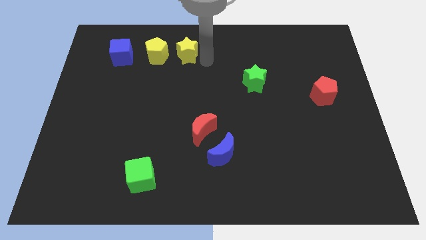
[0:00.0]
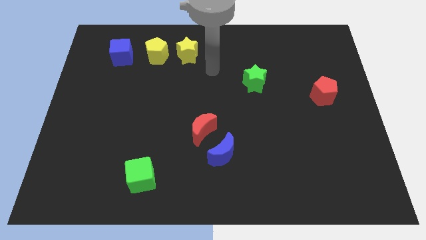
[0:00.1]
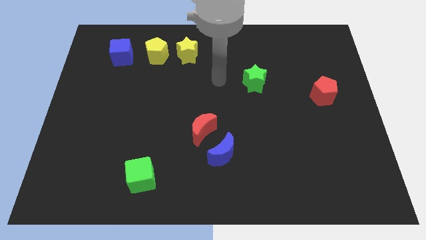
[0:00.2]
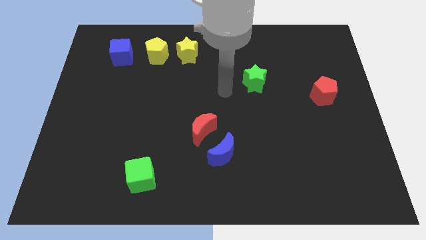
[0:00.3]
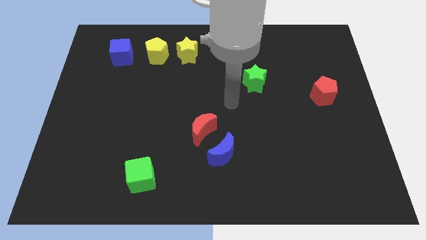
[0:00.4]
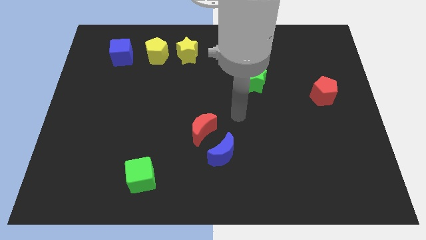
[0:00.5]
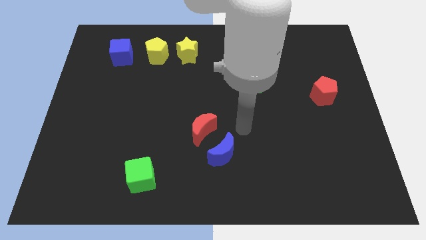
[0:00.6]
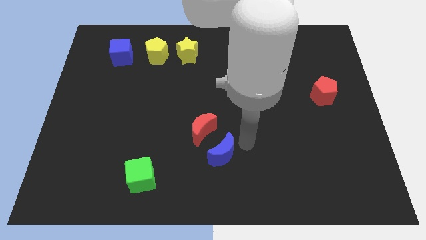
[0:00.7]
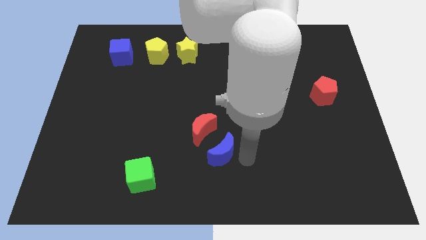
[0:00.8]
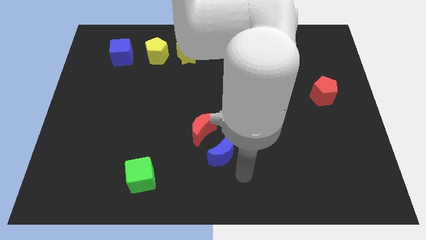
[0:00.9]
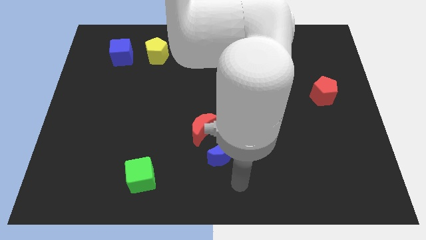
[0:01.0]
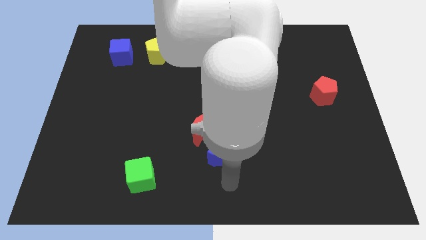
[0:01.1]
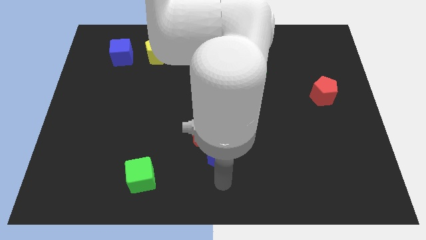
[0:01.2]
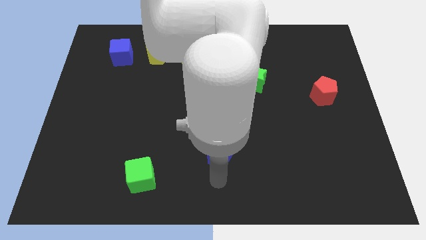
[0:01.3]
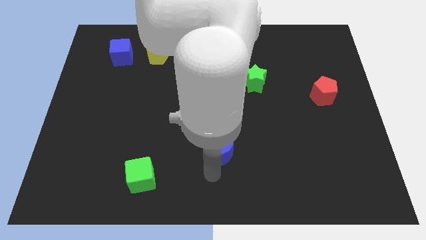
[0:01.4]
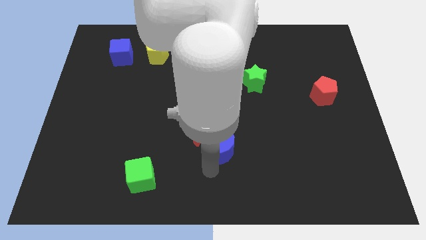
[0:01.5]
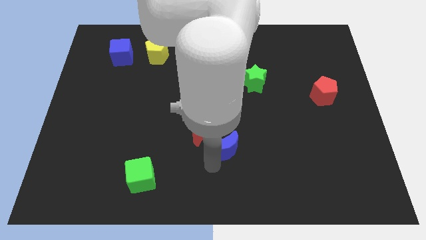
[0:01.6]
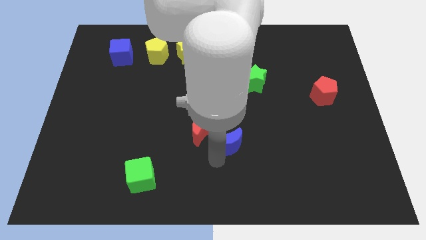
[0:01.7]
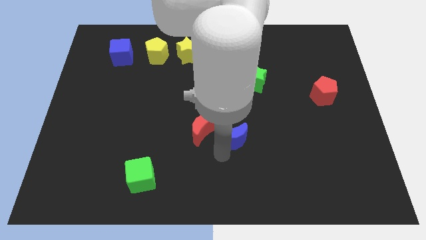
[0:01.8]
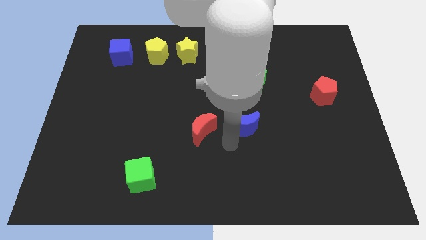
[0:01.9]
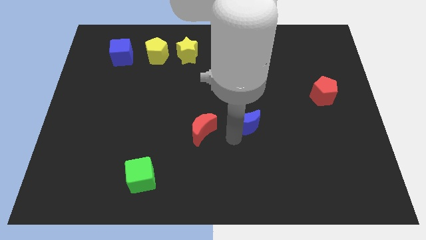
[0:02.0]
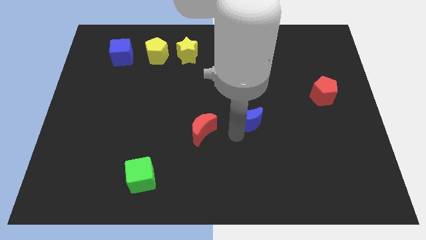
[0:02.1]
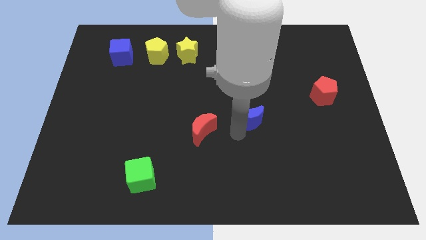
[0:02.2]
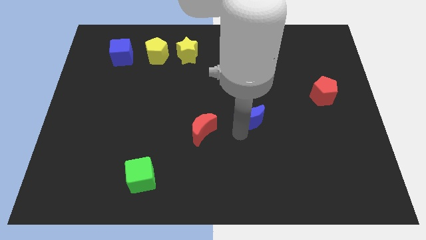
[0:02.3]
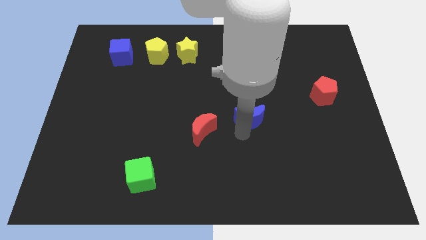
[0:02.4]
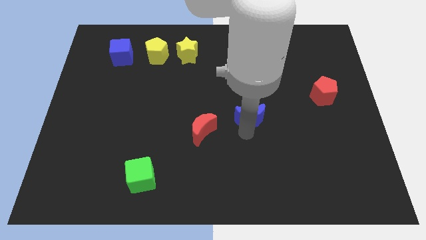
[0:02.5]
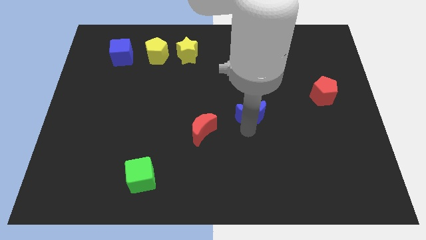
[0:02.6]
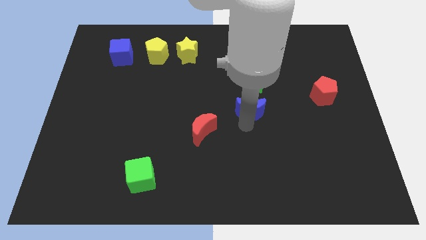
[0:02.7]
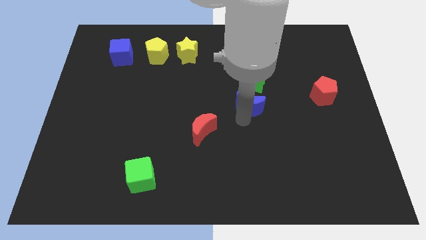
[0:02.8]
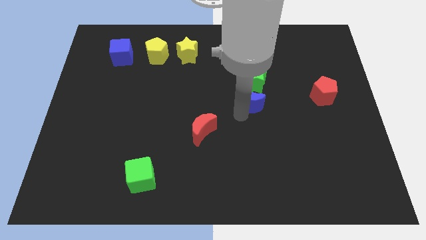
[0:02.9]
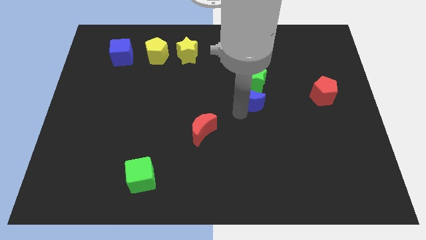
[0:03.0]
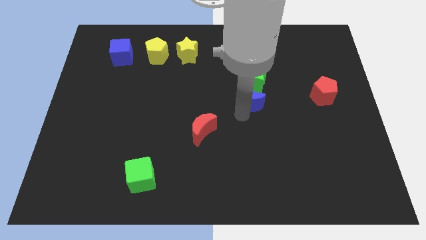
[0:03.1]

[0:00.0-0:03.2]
put the blue moon at the bottom of green star

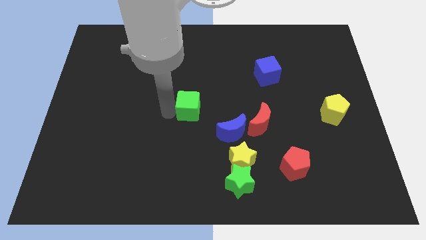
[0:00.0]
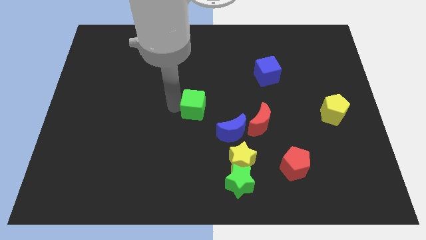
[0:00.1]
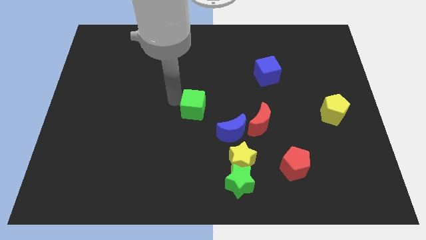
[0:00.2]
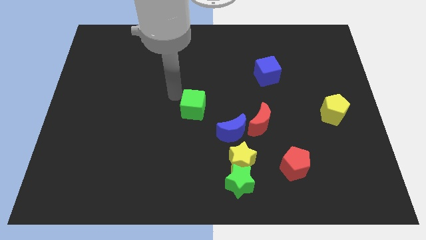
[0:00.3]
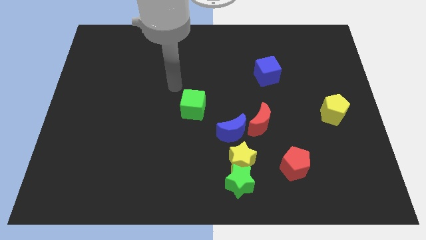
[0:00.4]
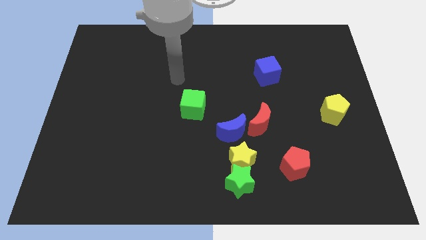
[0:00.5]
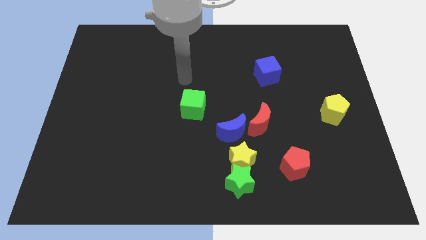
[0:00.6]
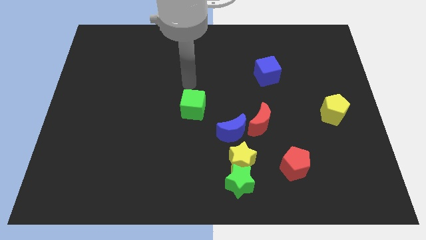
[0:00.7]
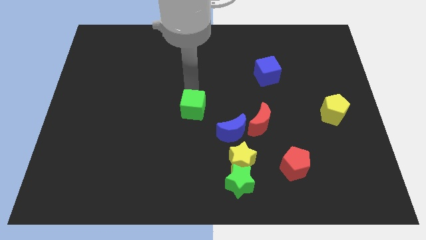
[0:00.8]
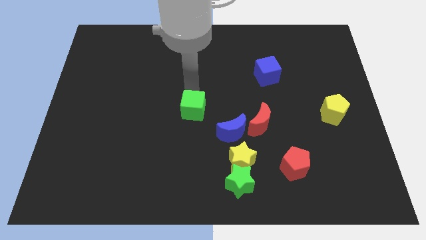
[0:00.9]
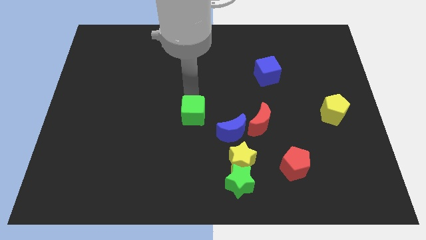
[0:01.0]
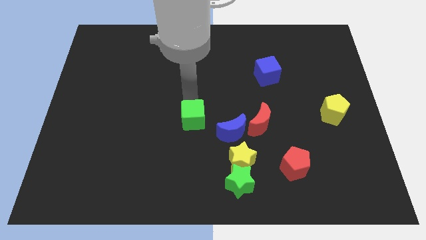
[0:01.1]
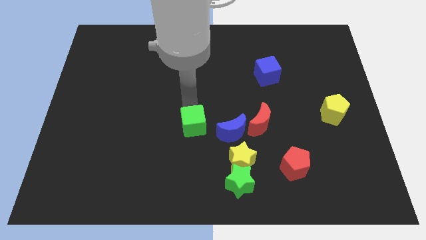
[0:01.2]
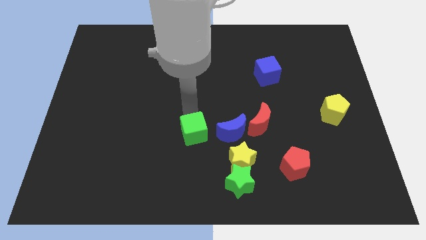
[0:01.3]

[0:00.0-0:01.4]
place the green cube at left side of the blue crescent

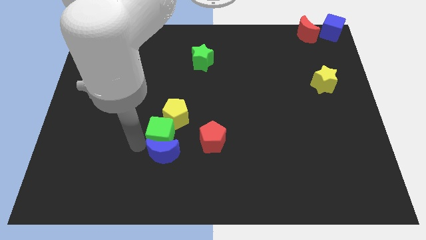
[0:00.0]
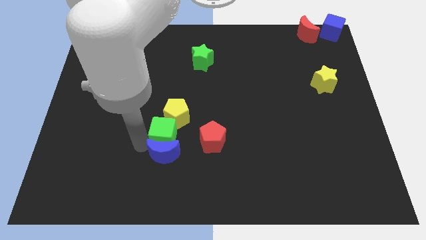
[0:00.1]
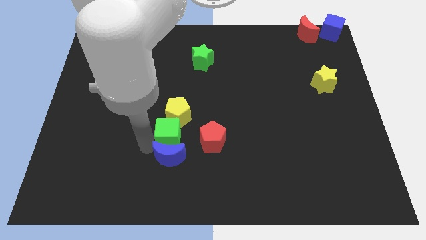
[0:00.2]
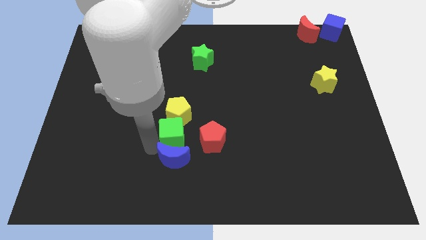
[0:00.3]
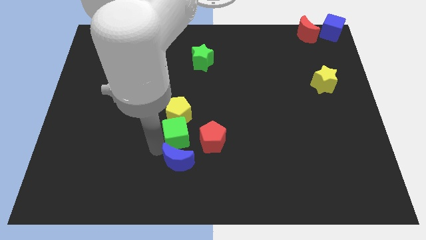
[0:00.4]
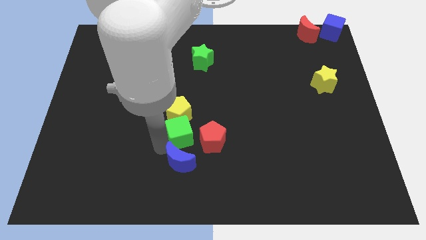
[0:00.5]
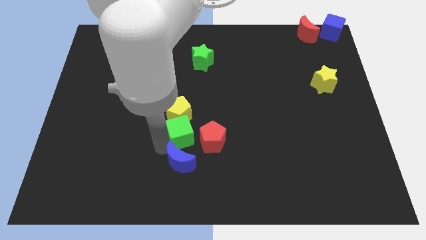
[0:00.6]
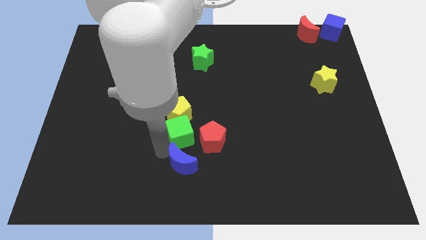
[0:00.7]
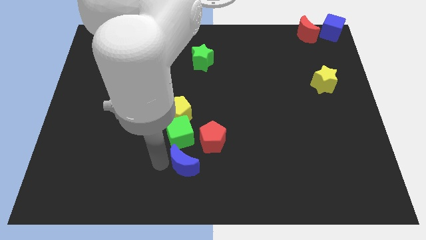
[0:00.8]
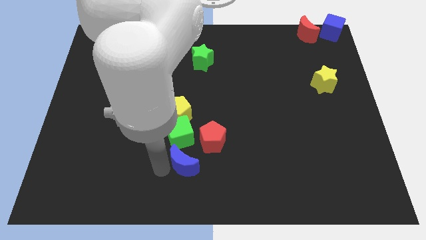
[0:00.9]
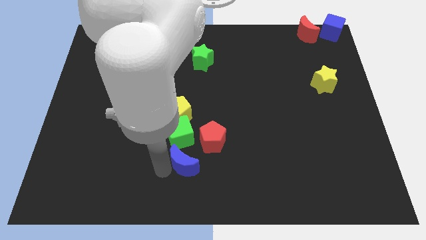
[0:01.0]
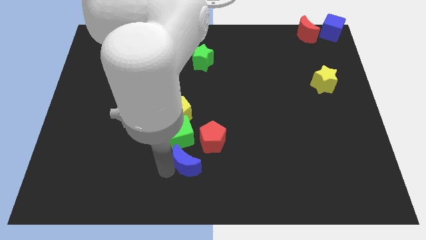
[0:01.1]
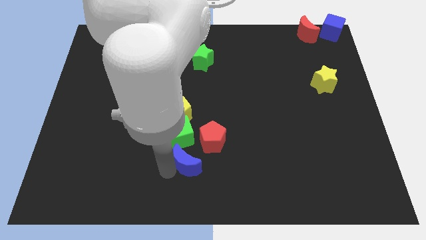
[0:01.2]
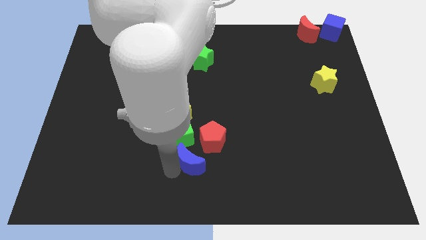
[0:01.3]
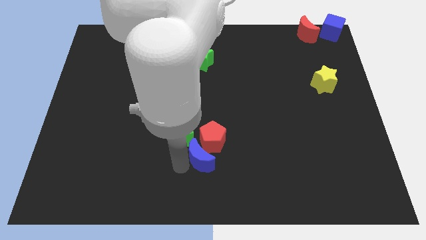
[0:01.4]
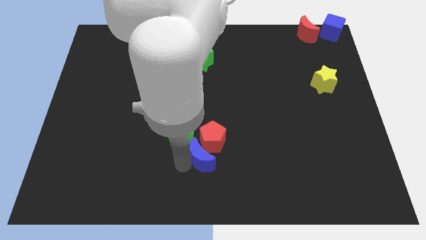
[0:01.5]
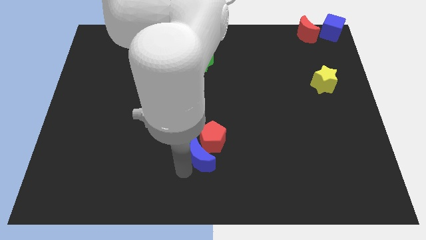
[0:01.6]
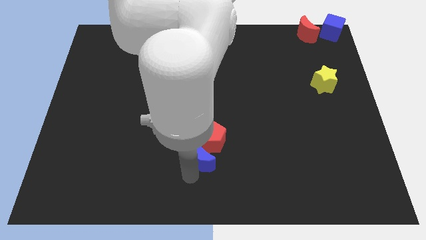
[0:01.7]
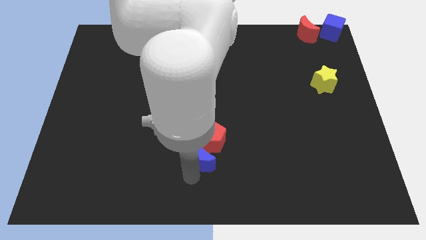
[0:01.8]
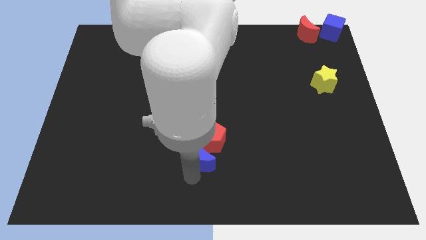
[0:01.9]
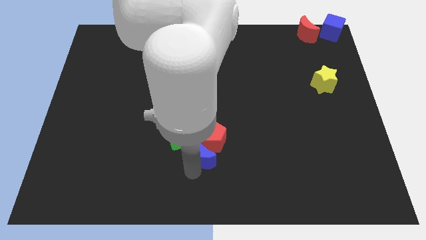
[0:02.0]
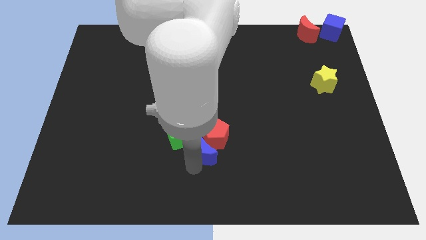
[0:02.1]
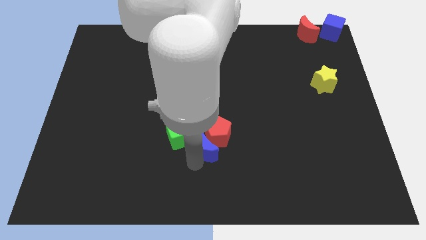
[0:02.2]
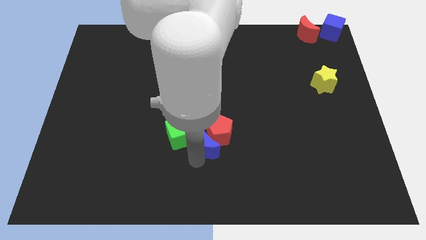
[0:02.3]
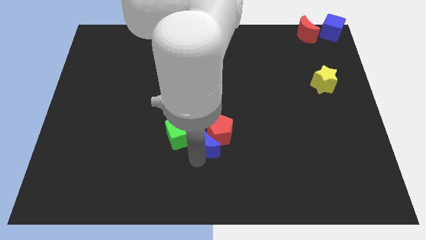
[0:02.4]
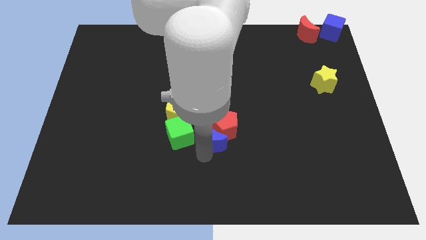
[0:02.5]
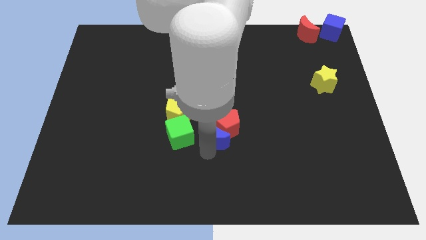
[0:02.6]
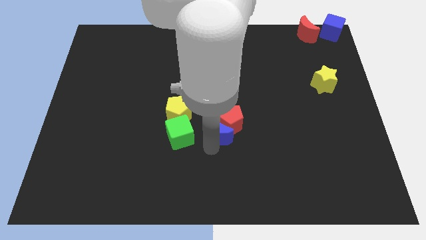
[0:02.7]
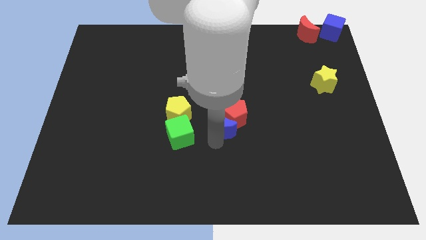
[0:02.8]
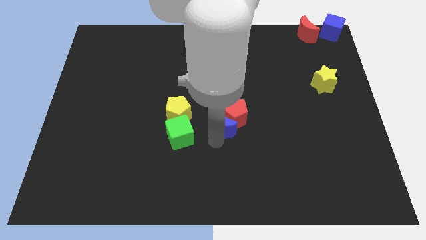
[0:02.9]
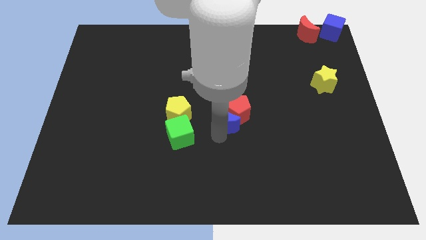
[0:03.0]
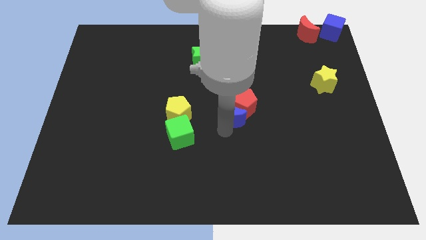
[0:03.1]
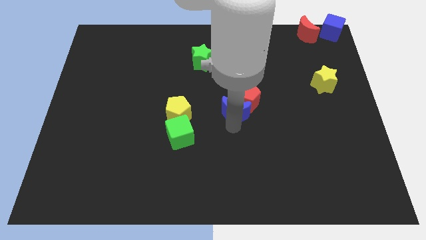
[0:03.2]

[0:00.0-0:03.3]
place the red pentagon and blue moon diagonally in between both the yellow blocks

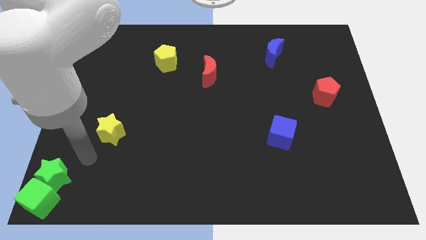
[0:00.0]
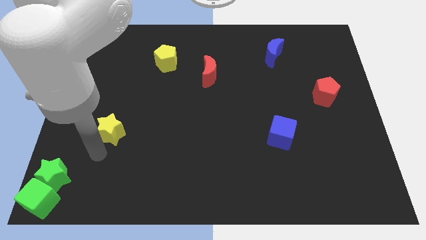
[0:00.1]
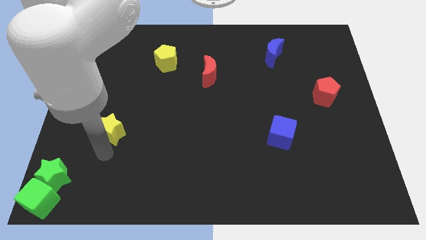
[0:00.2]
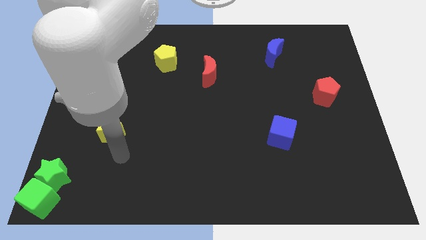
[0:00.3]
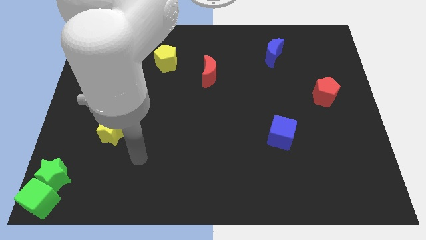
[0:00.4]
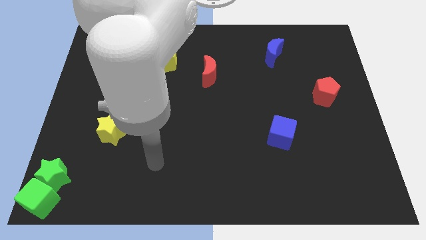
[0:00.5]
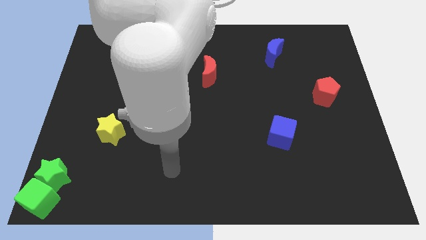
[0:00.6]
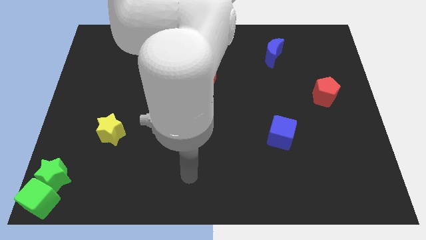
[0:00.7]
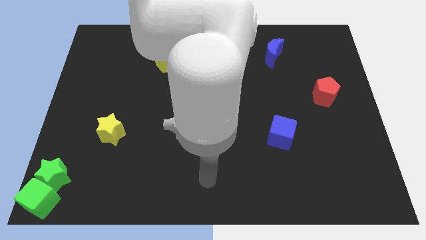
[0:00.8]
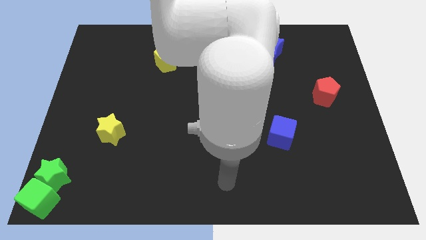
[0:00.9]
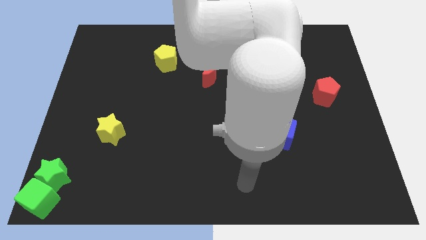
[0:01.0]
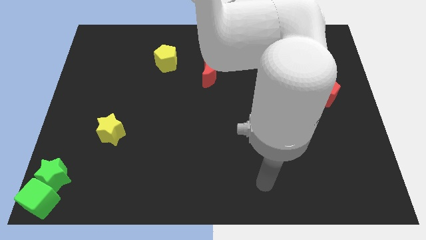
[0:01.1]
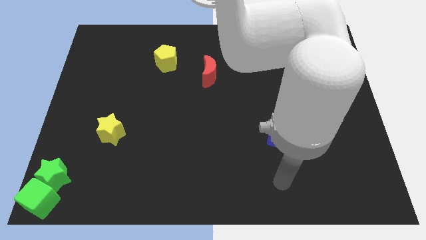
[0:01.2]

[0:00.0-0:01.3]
move your arm away from the green star
